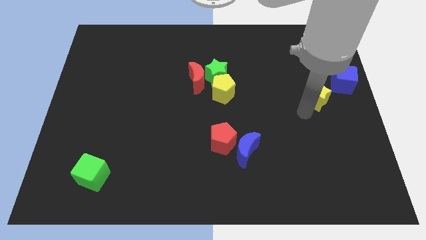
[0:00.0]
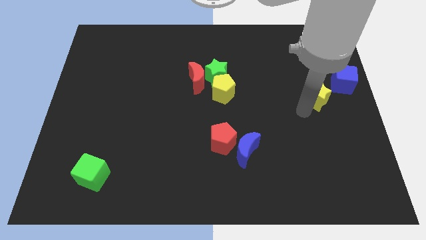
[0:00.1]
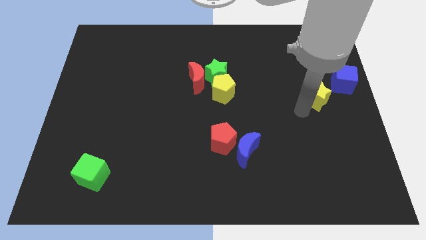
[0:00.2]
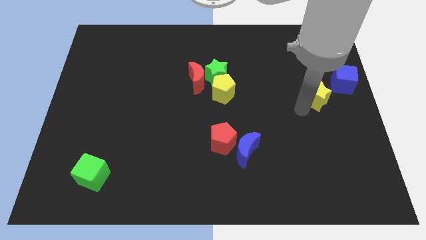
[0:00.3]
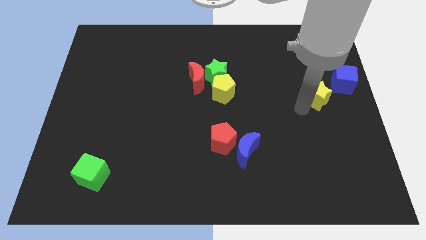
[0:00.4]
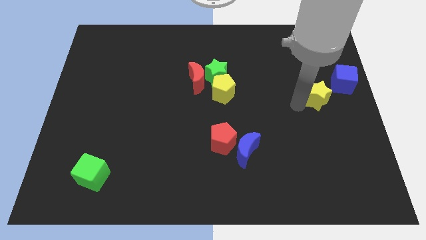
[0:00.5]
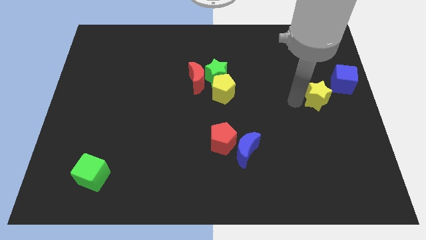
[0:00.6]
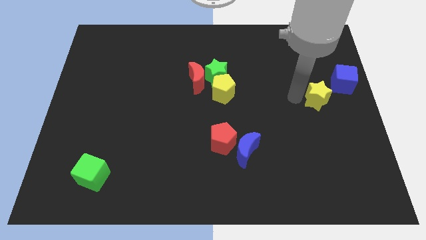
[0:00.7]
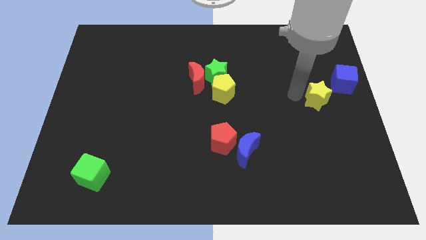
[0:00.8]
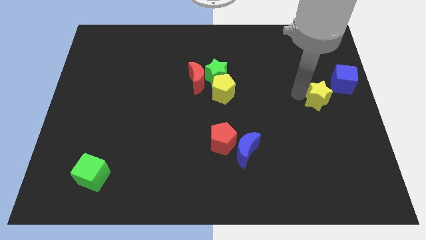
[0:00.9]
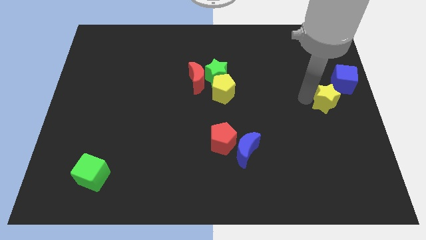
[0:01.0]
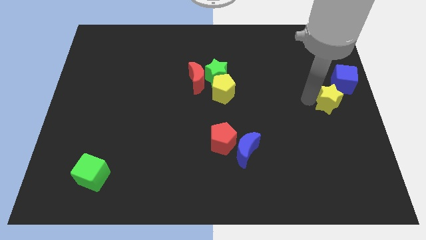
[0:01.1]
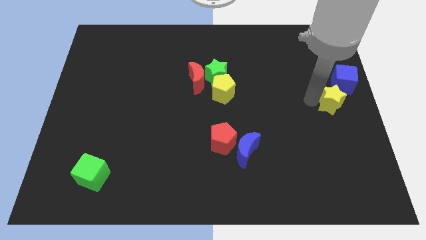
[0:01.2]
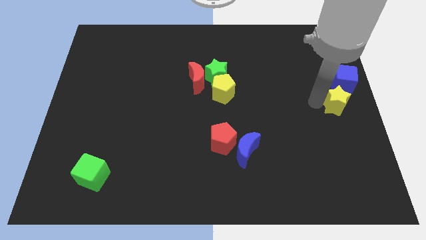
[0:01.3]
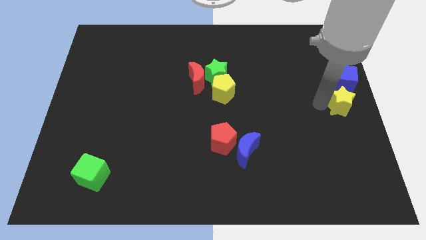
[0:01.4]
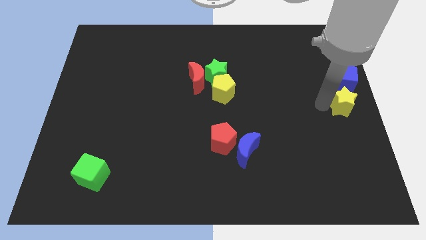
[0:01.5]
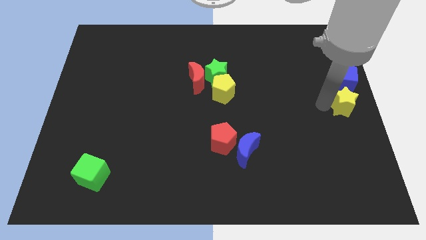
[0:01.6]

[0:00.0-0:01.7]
move the yellow star to the bottom side of the blue cube

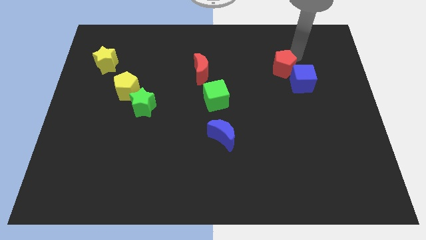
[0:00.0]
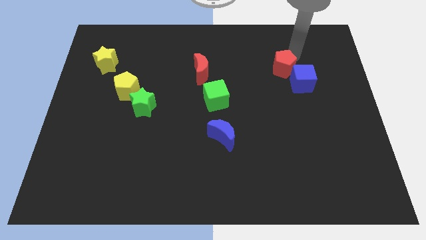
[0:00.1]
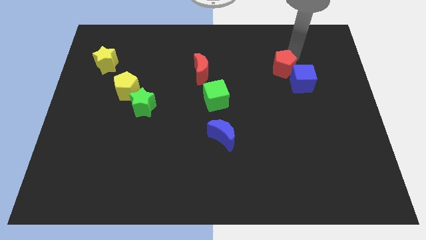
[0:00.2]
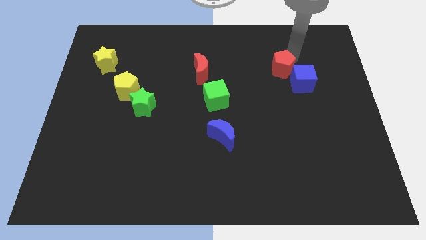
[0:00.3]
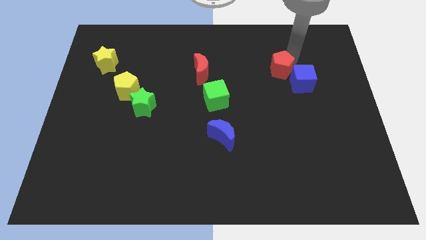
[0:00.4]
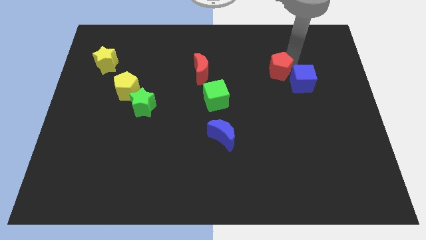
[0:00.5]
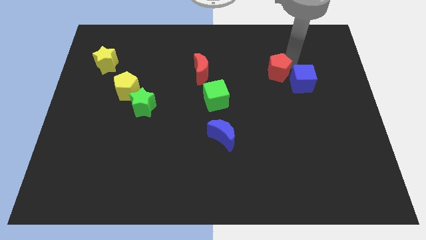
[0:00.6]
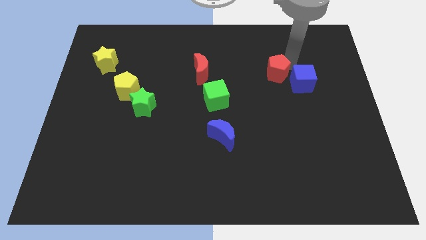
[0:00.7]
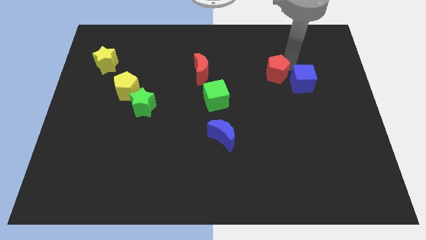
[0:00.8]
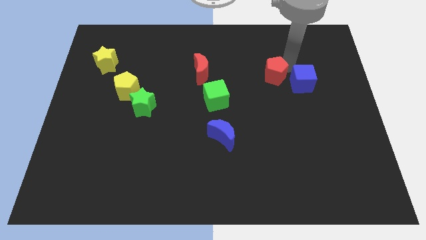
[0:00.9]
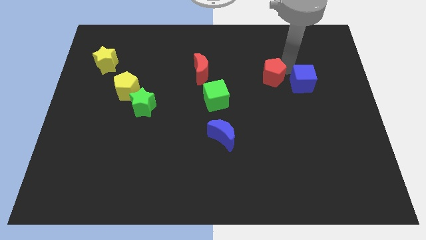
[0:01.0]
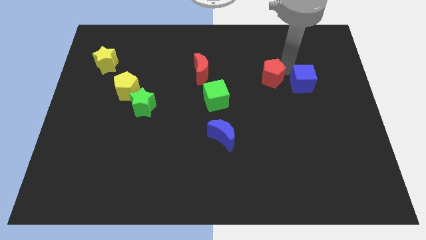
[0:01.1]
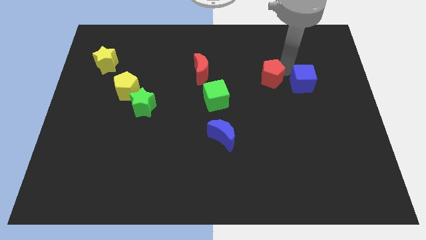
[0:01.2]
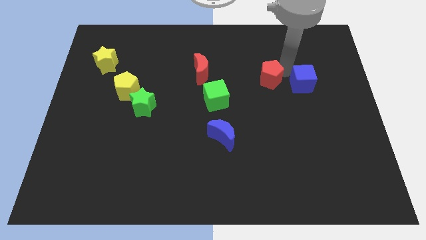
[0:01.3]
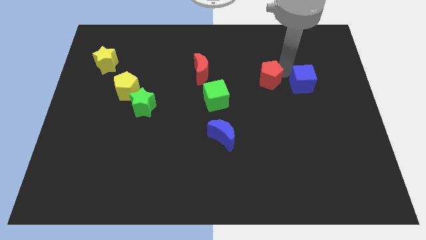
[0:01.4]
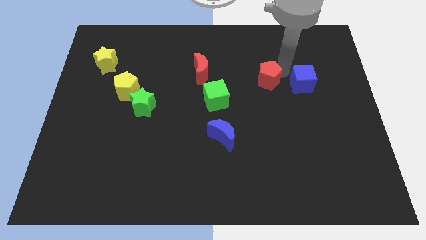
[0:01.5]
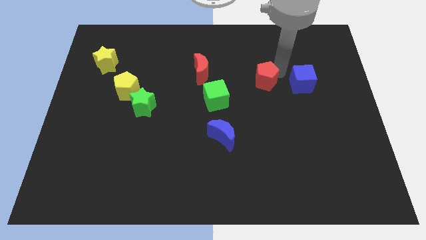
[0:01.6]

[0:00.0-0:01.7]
push the red pentagon to the left of the blue cube

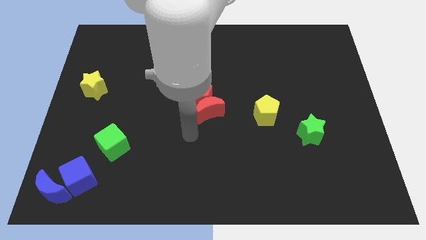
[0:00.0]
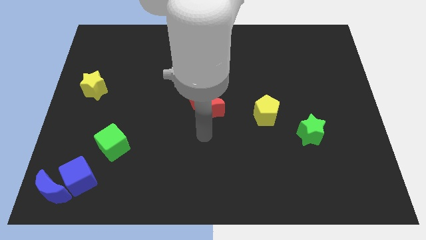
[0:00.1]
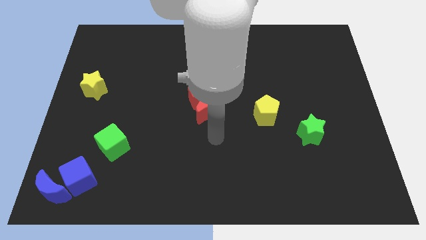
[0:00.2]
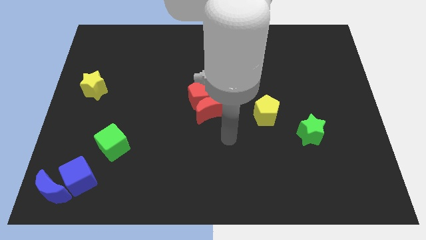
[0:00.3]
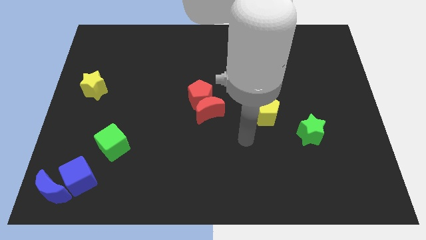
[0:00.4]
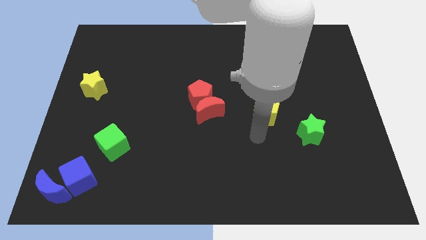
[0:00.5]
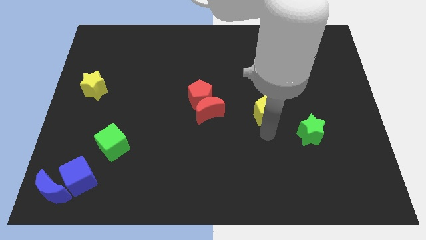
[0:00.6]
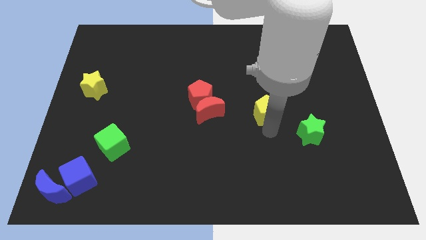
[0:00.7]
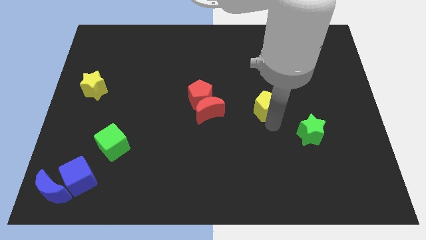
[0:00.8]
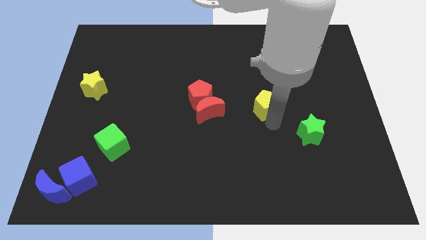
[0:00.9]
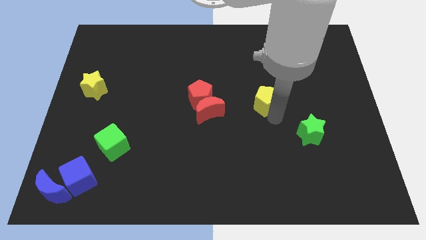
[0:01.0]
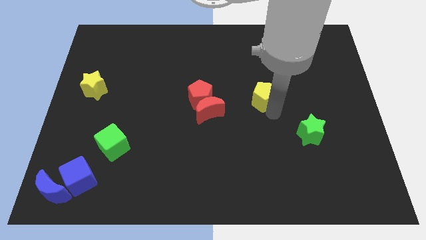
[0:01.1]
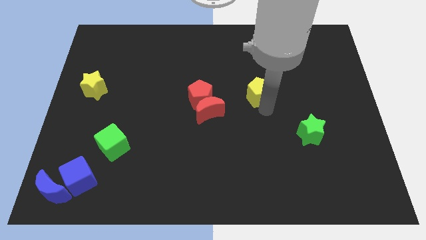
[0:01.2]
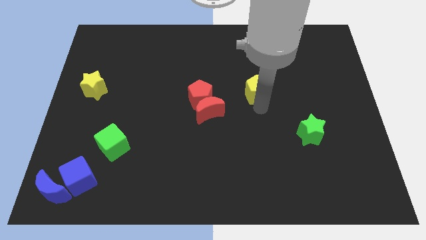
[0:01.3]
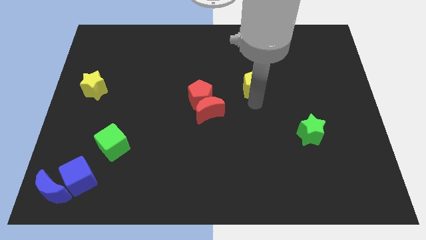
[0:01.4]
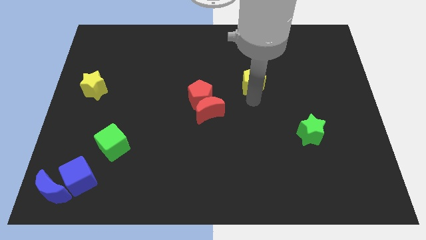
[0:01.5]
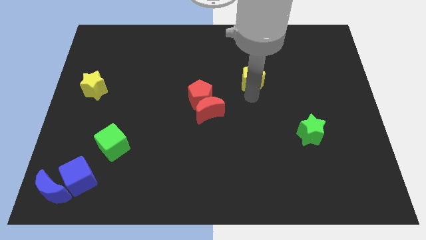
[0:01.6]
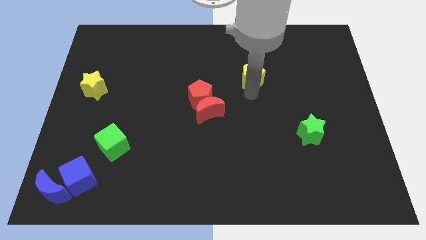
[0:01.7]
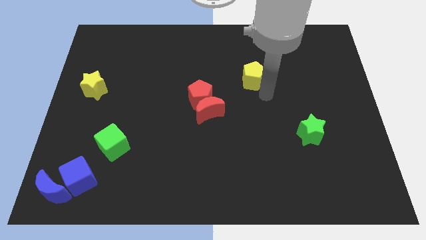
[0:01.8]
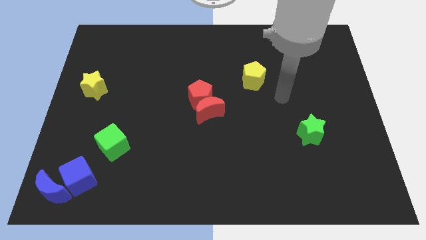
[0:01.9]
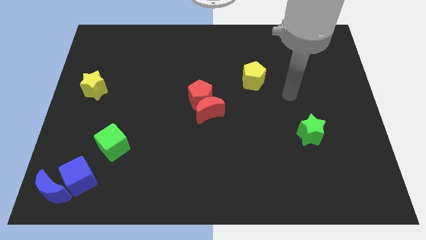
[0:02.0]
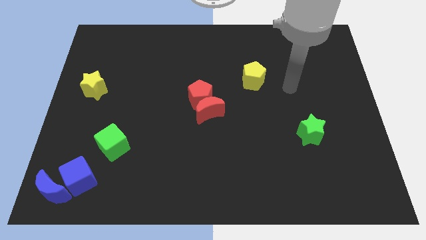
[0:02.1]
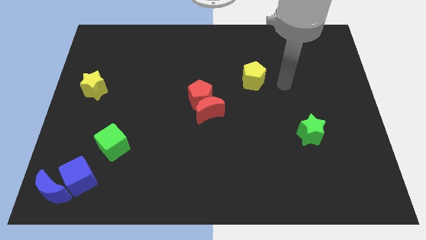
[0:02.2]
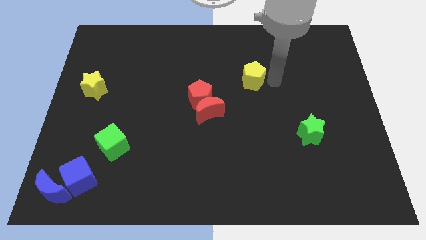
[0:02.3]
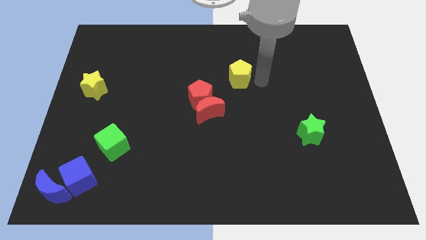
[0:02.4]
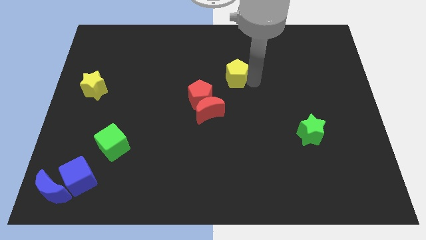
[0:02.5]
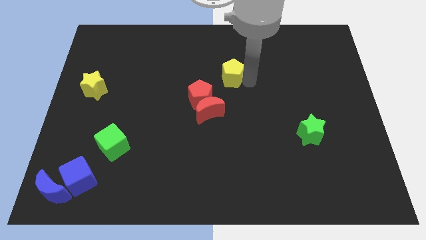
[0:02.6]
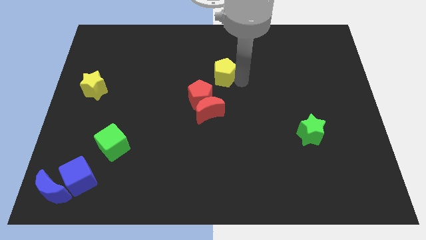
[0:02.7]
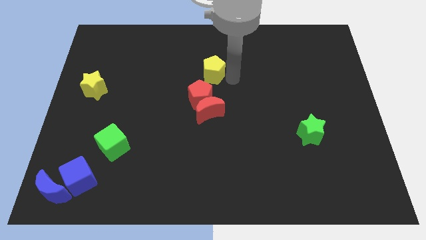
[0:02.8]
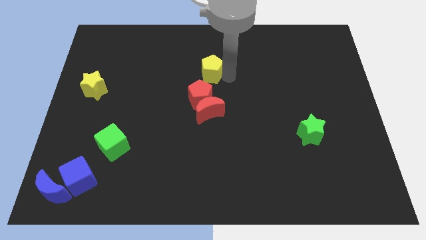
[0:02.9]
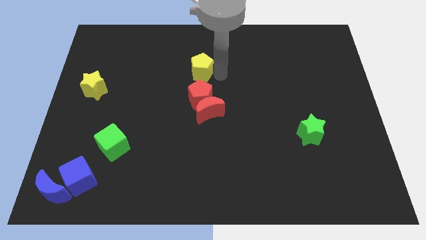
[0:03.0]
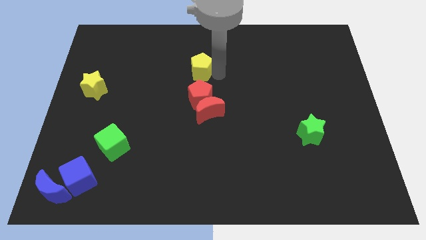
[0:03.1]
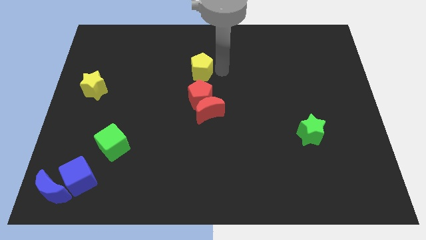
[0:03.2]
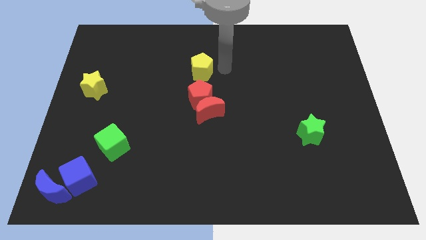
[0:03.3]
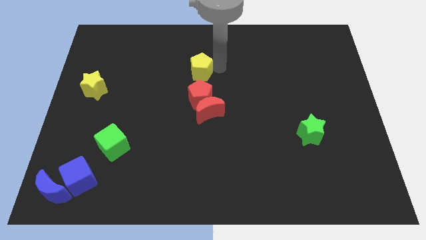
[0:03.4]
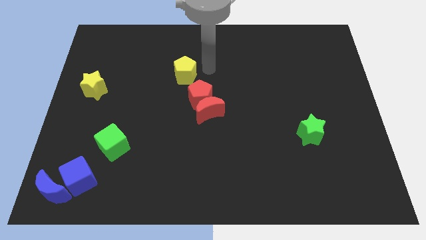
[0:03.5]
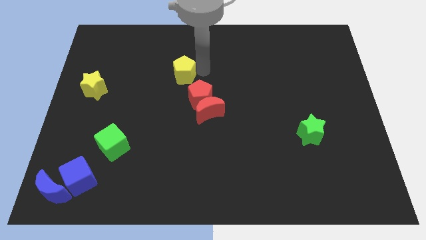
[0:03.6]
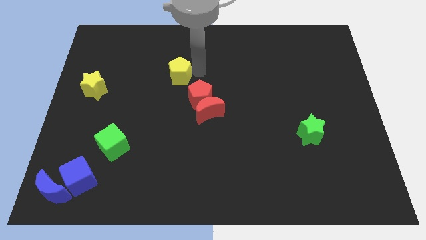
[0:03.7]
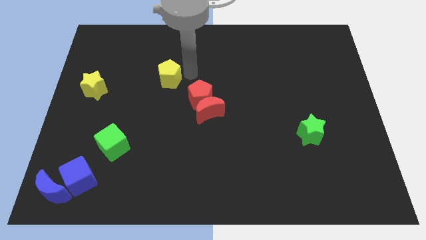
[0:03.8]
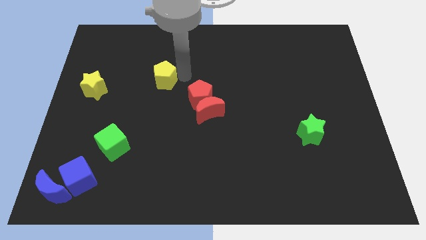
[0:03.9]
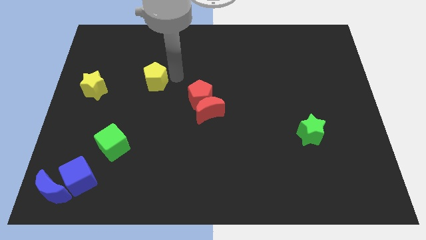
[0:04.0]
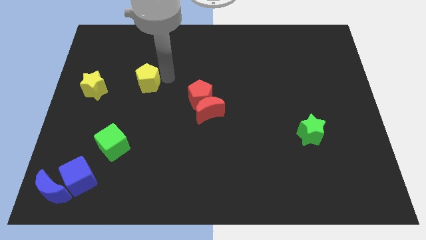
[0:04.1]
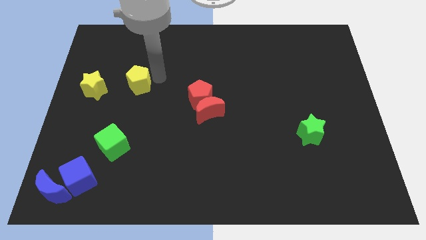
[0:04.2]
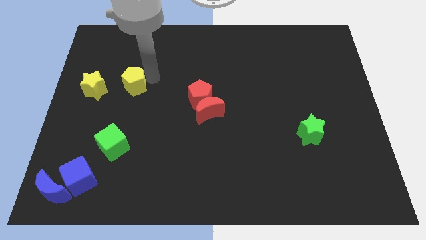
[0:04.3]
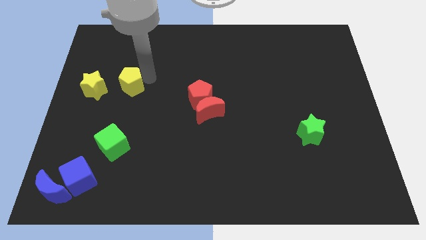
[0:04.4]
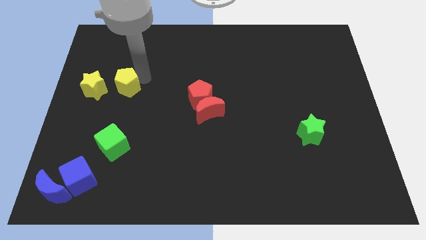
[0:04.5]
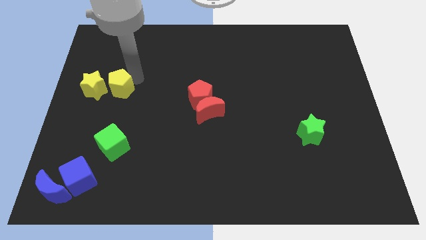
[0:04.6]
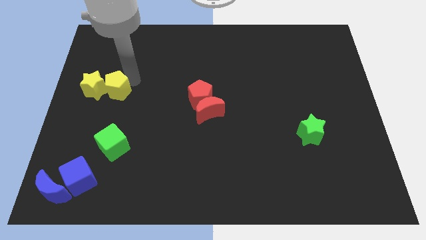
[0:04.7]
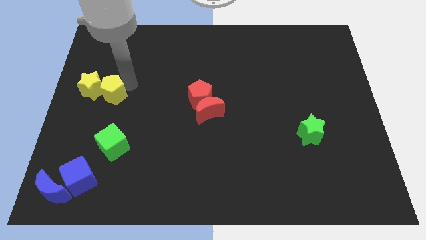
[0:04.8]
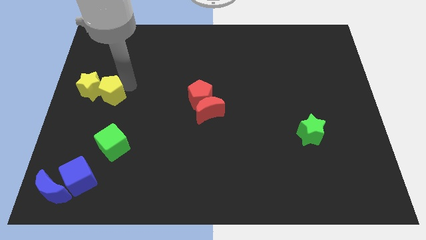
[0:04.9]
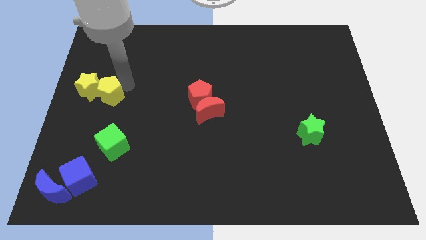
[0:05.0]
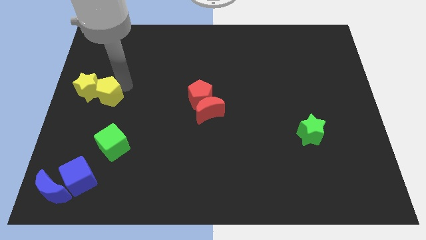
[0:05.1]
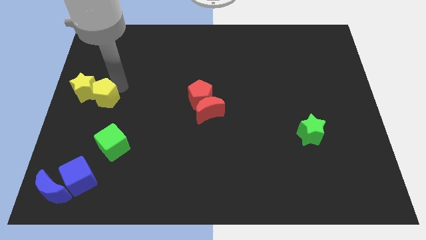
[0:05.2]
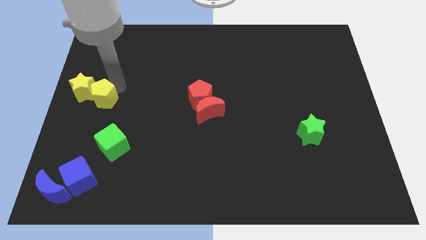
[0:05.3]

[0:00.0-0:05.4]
push the yellow pentagon into the yellow star

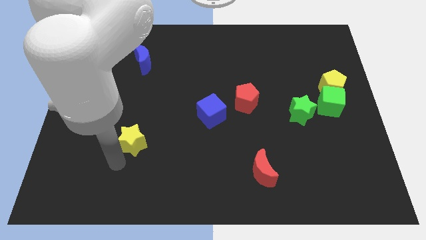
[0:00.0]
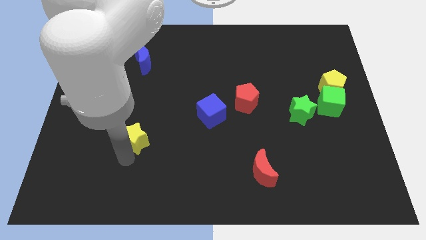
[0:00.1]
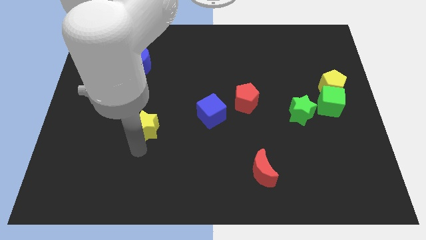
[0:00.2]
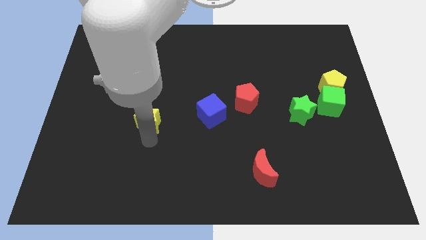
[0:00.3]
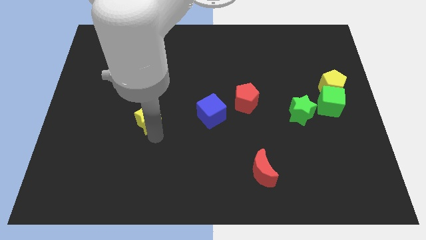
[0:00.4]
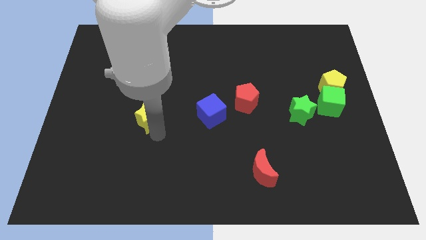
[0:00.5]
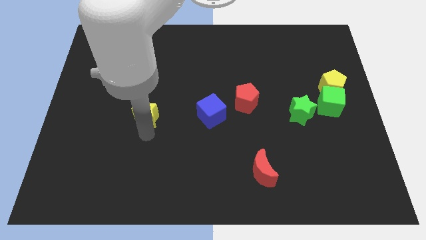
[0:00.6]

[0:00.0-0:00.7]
push the yellow star to the parallel left of the blue cube
